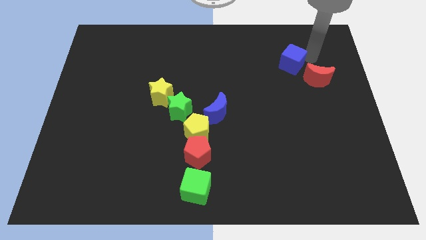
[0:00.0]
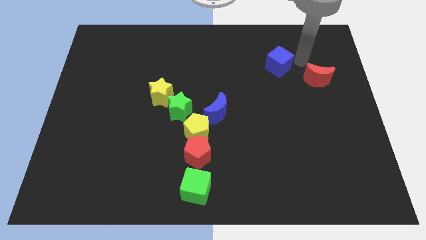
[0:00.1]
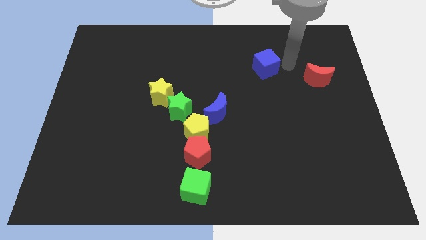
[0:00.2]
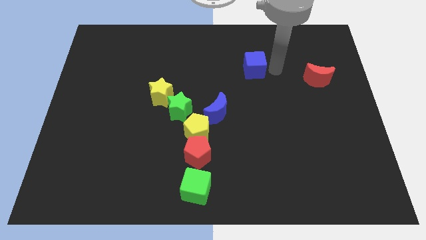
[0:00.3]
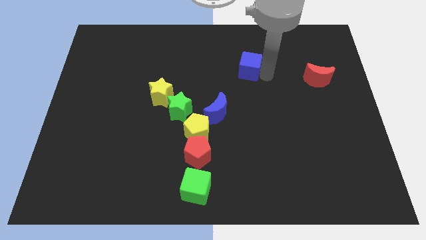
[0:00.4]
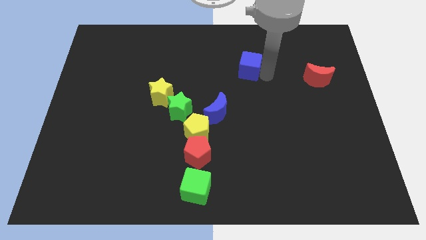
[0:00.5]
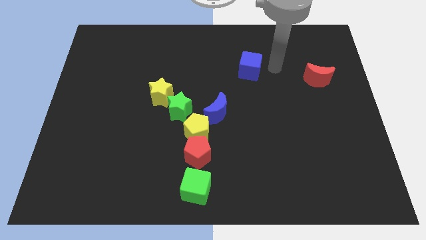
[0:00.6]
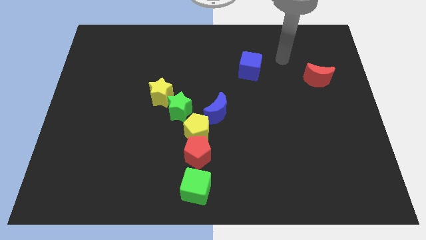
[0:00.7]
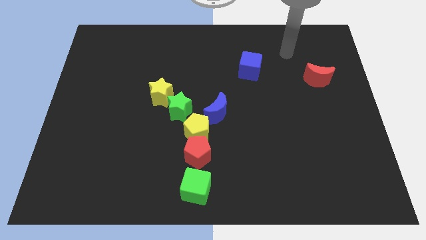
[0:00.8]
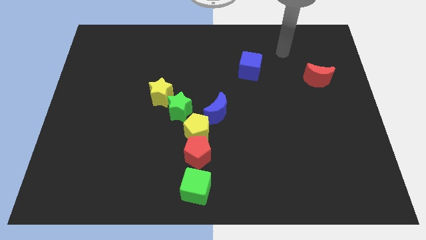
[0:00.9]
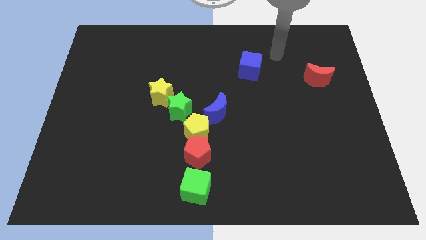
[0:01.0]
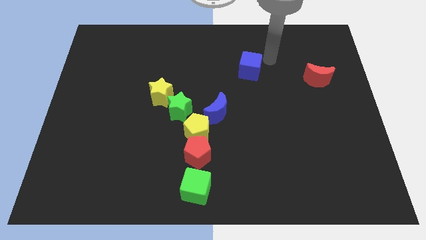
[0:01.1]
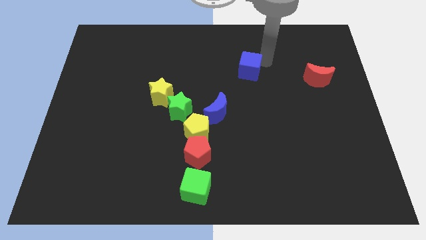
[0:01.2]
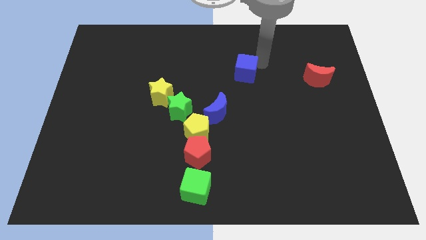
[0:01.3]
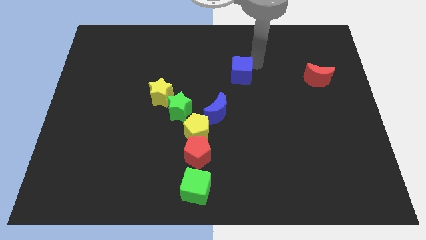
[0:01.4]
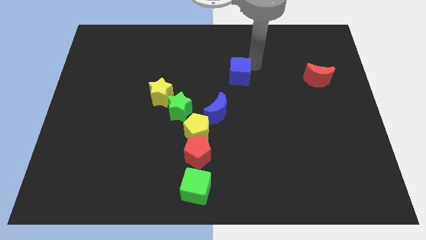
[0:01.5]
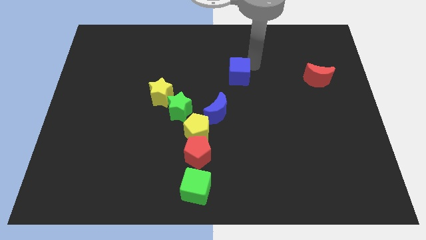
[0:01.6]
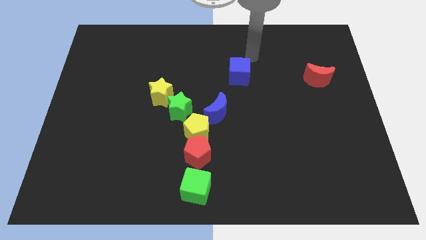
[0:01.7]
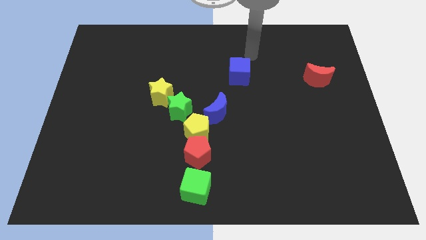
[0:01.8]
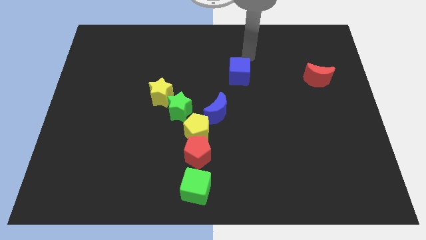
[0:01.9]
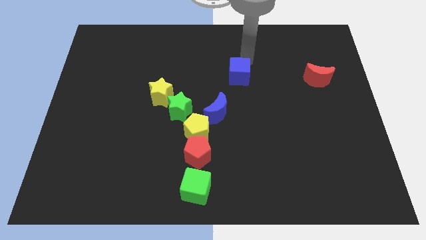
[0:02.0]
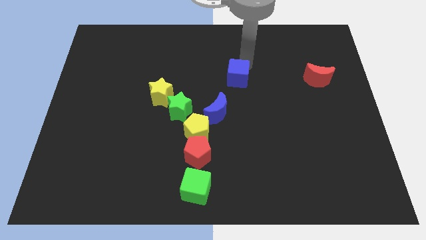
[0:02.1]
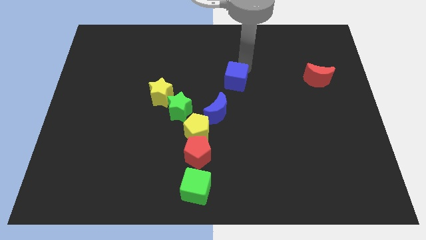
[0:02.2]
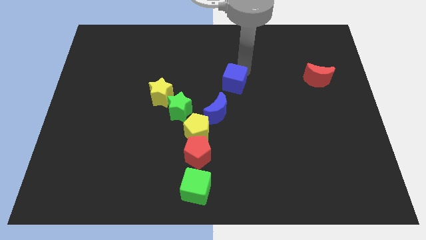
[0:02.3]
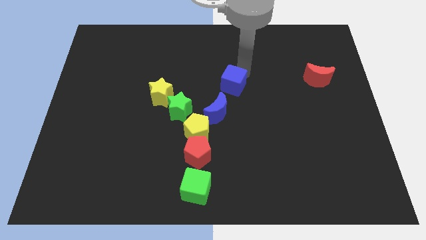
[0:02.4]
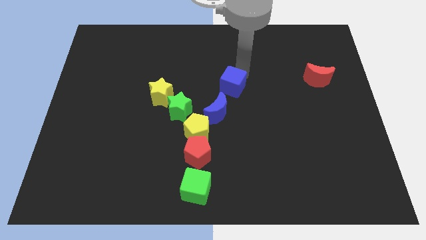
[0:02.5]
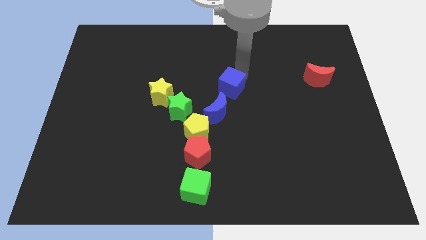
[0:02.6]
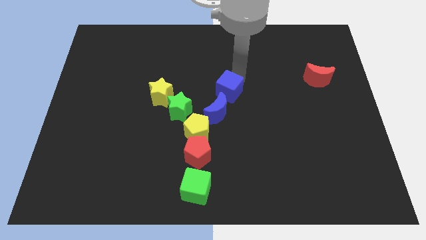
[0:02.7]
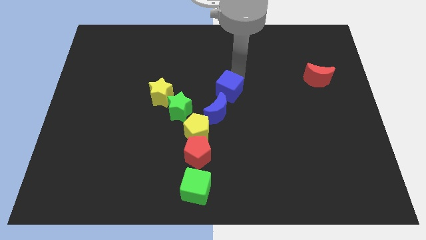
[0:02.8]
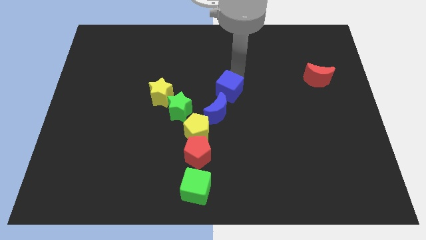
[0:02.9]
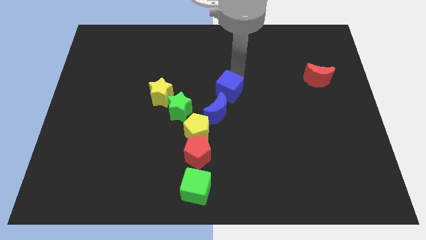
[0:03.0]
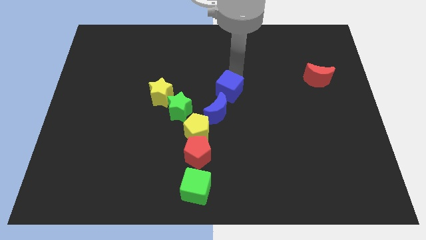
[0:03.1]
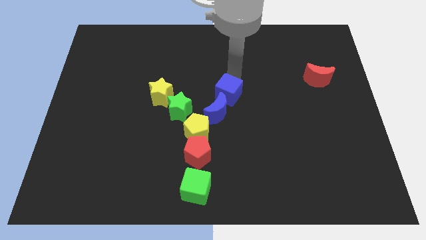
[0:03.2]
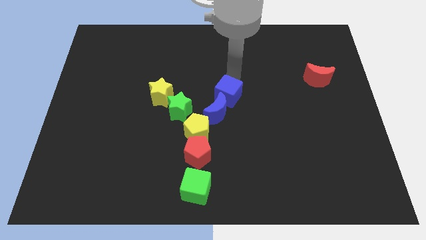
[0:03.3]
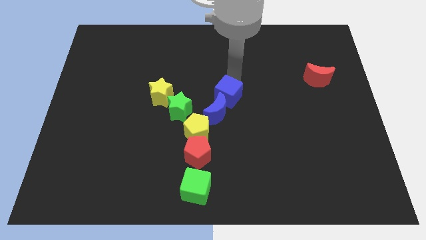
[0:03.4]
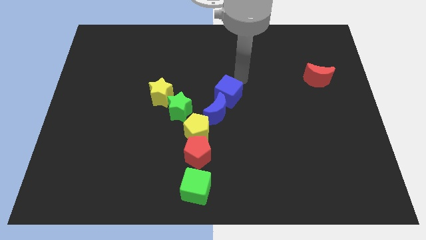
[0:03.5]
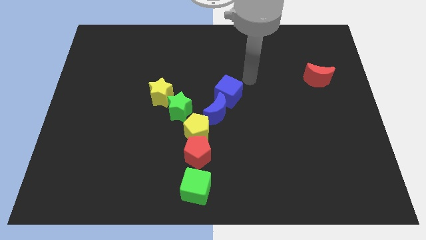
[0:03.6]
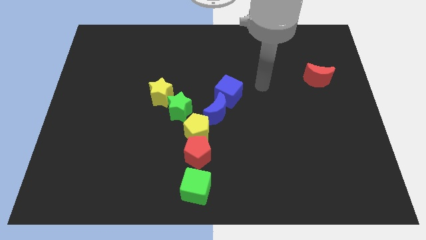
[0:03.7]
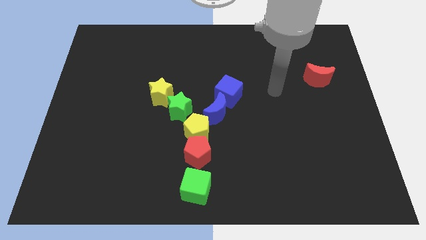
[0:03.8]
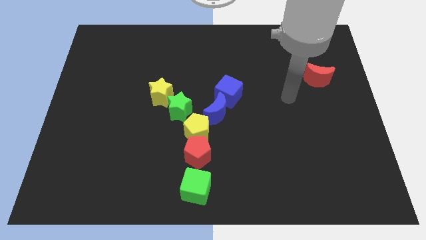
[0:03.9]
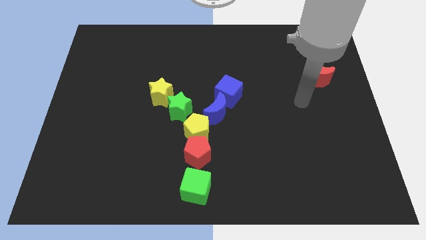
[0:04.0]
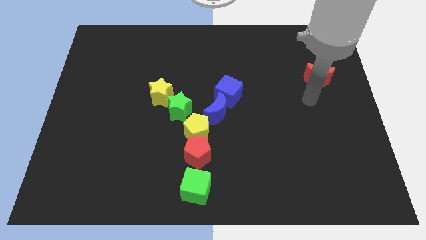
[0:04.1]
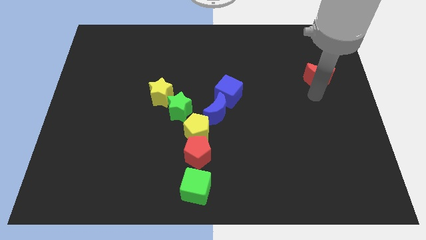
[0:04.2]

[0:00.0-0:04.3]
place the blue cube in diagonal position with the blue moon

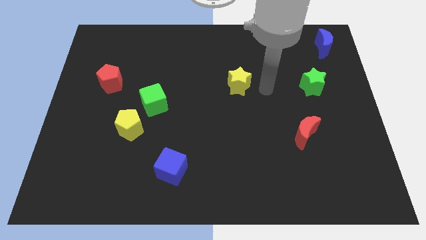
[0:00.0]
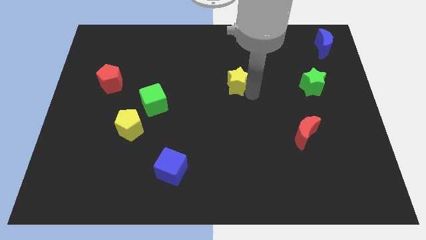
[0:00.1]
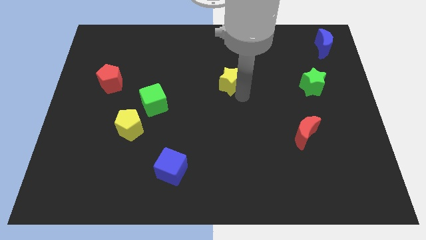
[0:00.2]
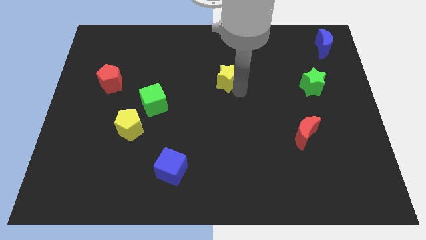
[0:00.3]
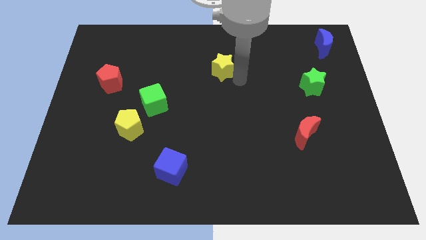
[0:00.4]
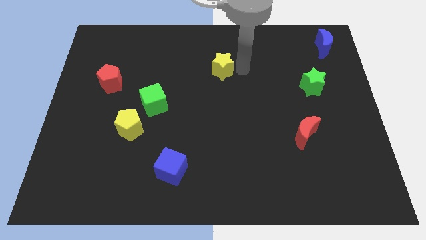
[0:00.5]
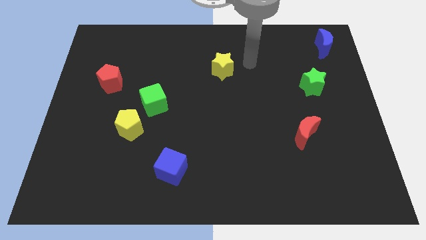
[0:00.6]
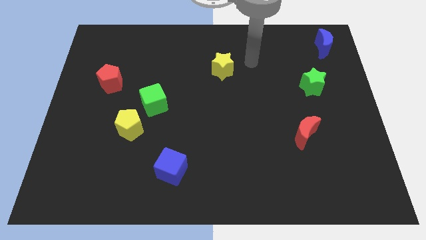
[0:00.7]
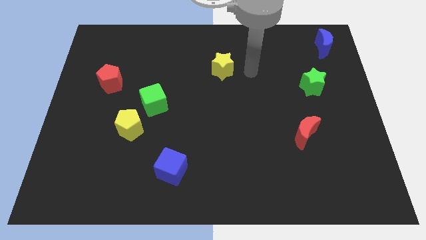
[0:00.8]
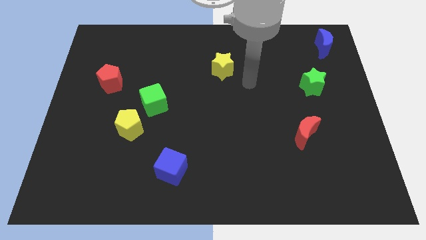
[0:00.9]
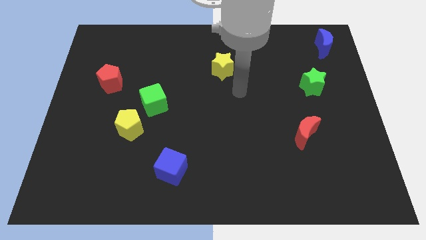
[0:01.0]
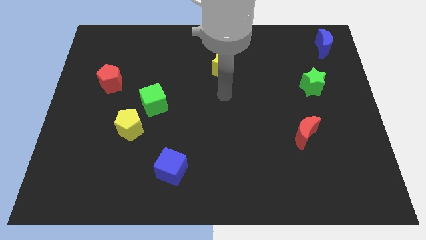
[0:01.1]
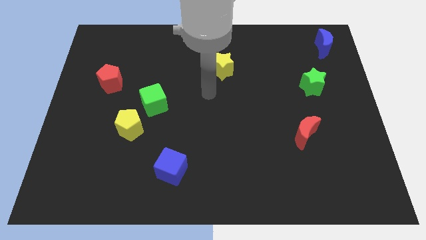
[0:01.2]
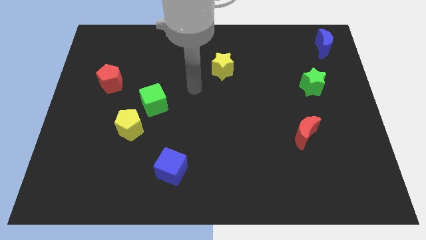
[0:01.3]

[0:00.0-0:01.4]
push yellow star slightly towards the top left

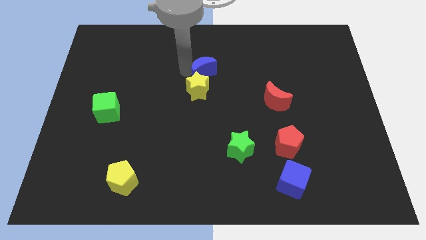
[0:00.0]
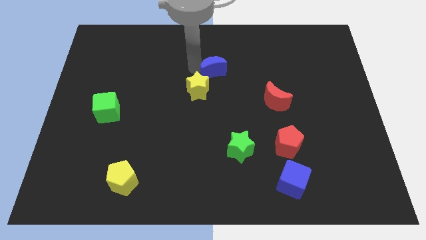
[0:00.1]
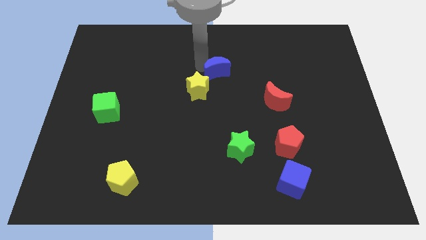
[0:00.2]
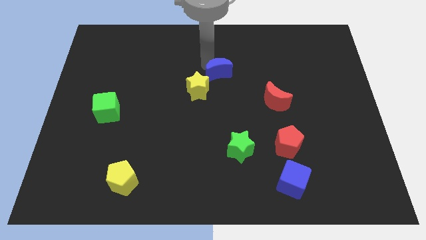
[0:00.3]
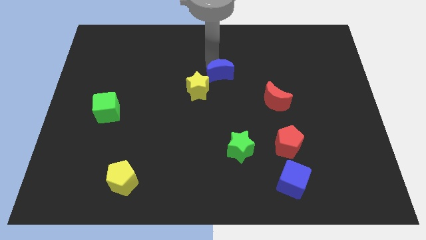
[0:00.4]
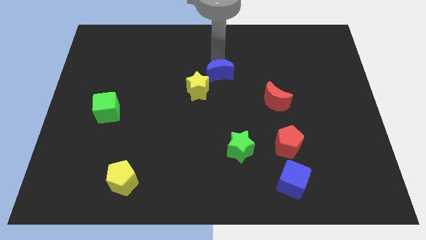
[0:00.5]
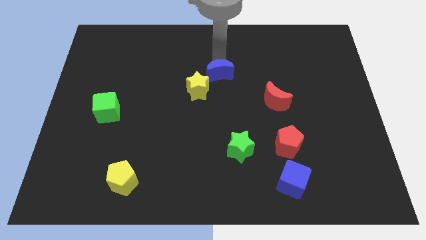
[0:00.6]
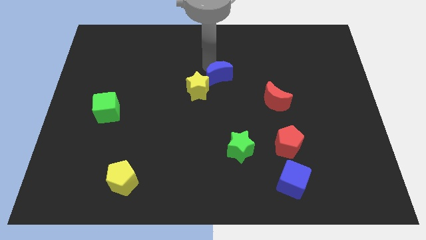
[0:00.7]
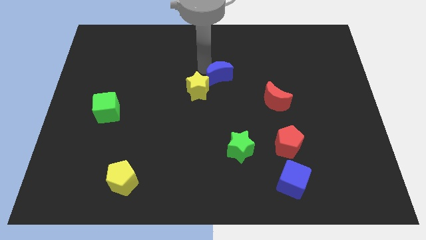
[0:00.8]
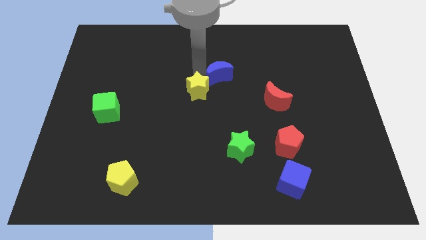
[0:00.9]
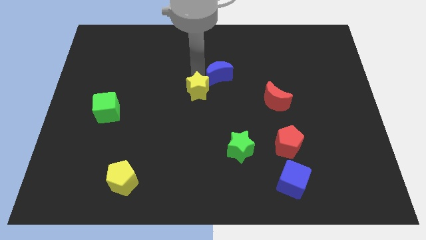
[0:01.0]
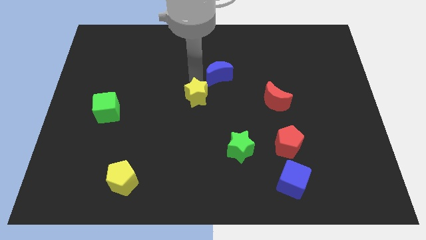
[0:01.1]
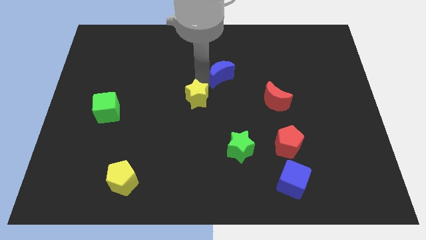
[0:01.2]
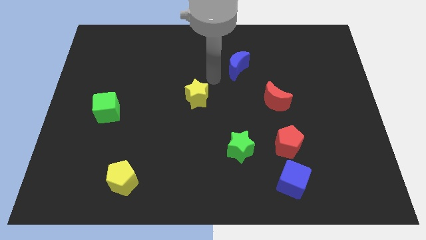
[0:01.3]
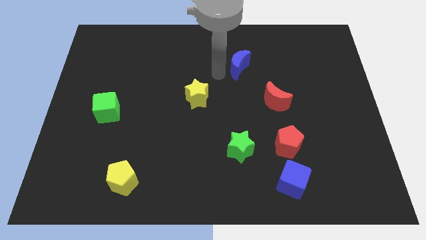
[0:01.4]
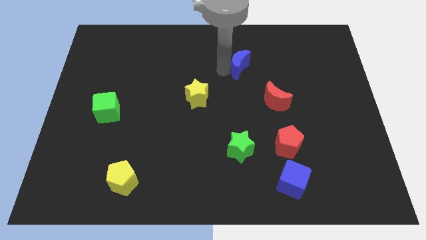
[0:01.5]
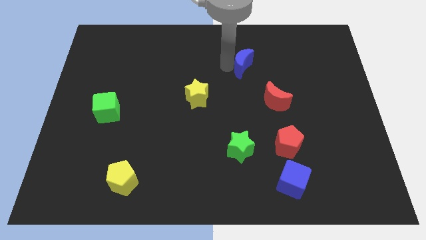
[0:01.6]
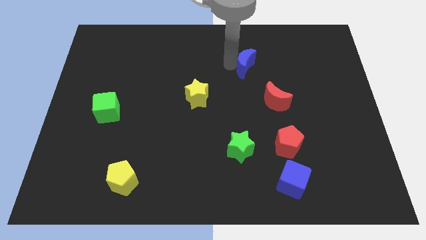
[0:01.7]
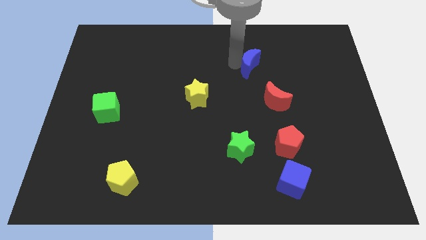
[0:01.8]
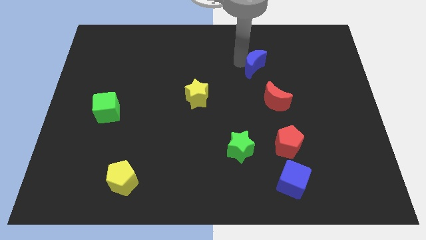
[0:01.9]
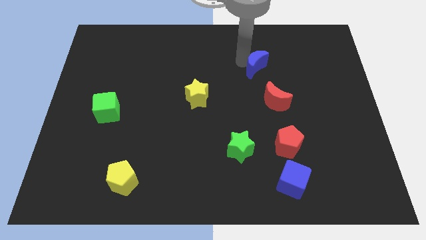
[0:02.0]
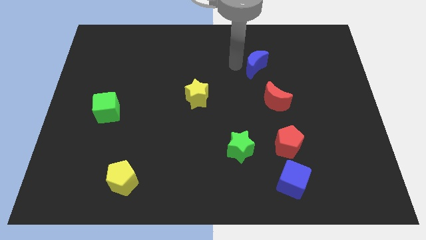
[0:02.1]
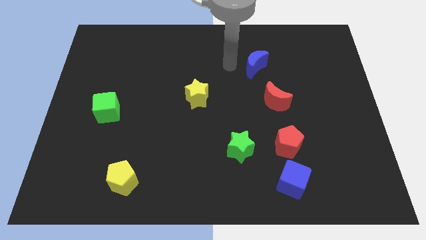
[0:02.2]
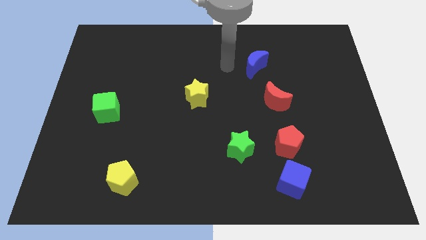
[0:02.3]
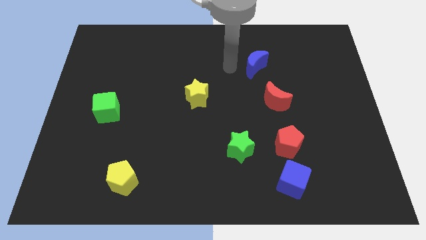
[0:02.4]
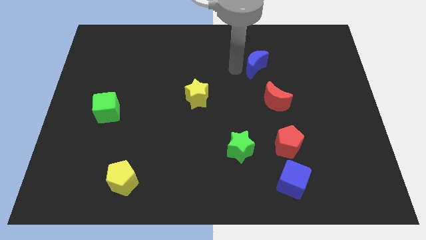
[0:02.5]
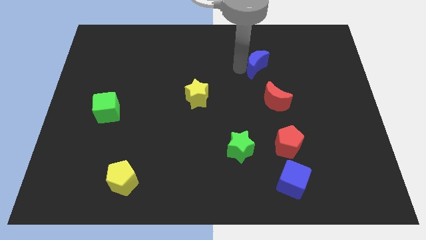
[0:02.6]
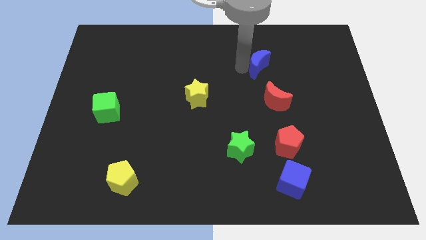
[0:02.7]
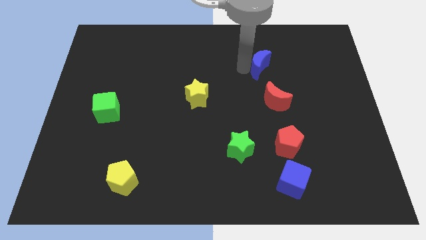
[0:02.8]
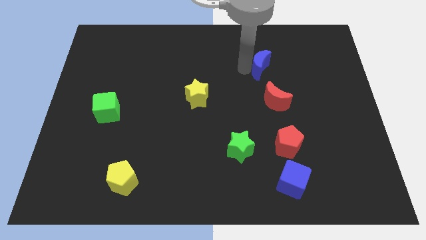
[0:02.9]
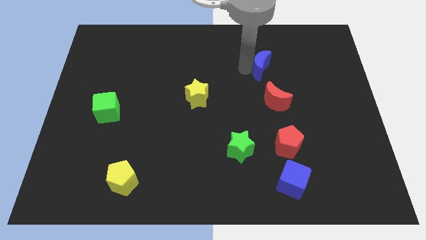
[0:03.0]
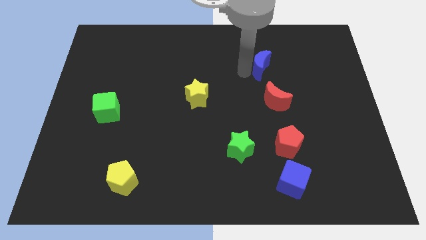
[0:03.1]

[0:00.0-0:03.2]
separate blue moon from yellow star

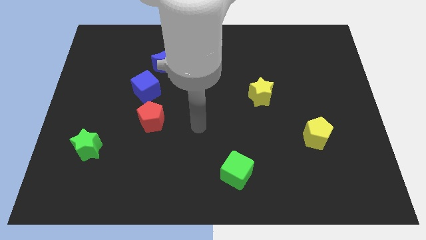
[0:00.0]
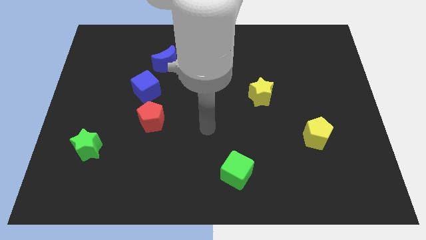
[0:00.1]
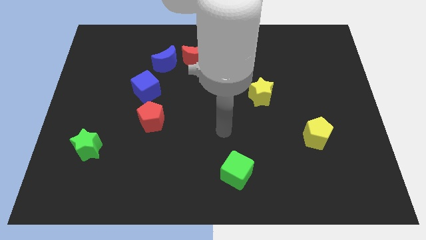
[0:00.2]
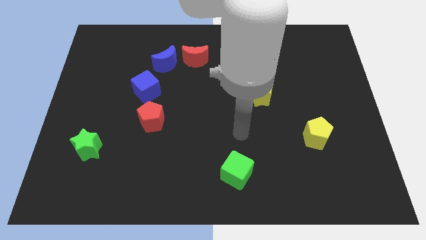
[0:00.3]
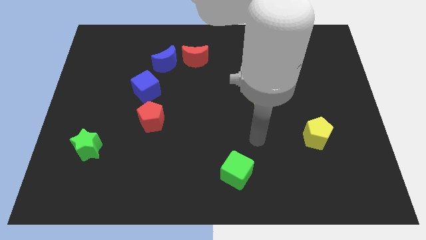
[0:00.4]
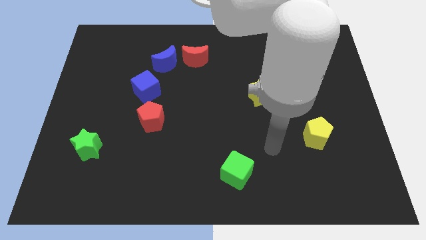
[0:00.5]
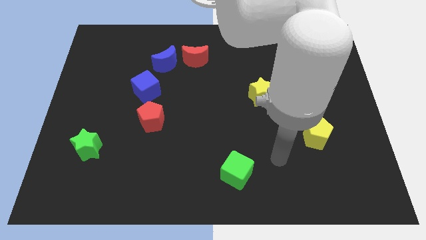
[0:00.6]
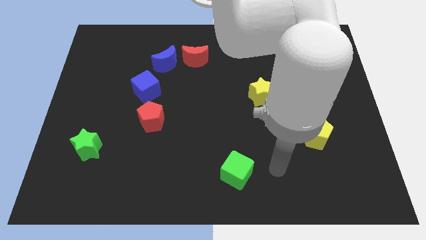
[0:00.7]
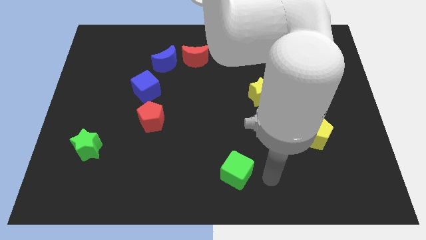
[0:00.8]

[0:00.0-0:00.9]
place your arm at the right of the green cube
